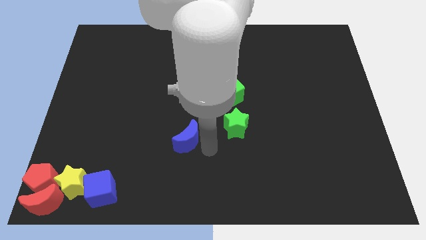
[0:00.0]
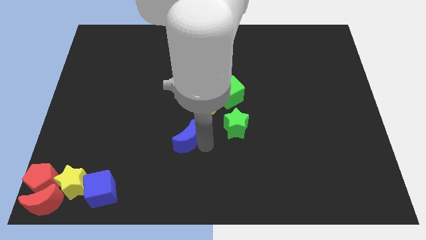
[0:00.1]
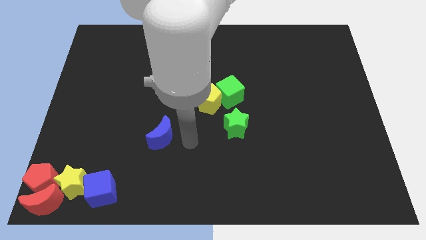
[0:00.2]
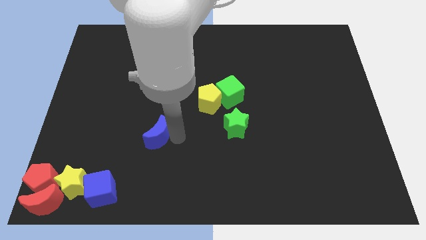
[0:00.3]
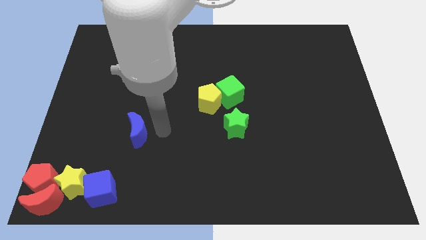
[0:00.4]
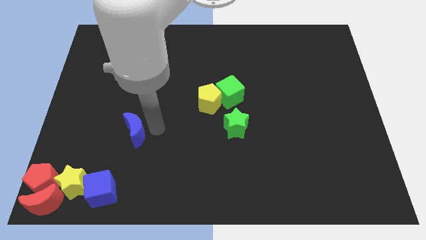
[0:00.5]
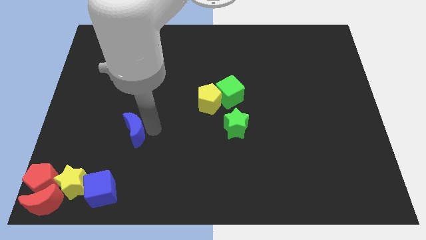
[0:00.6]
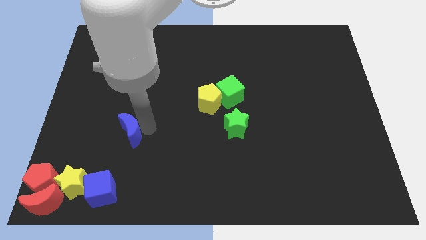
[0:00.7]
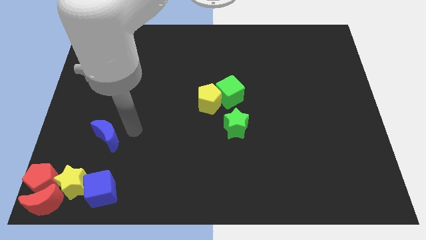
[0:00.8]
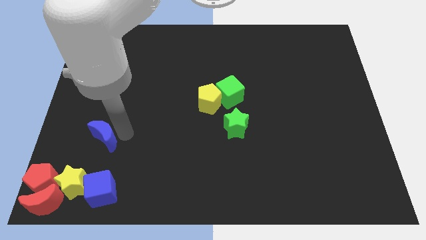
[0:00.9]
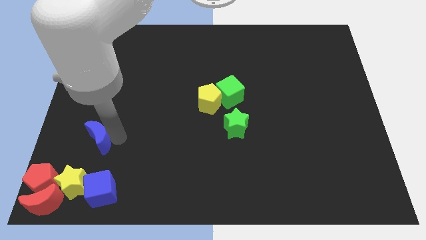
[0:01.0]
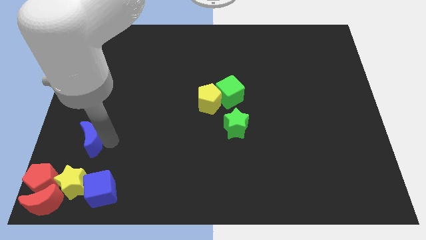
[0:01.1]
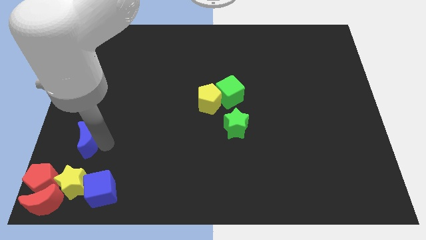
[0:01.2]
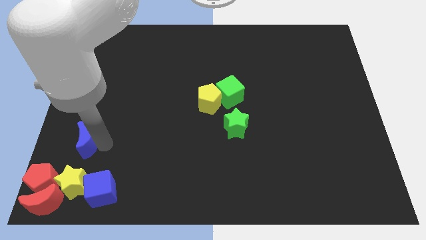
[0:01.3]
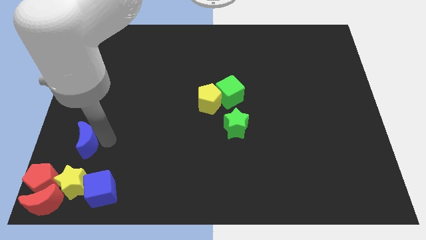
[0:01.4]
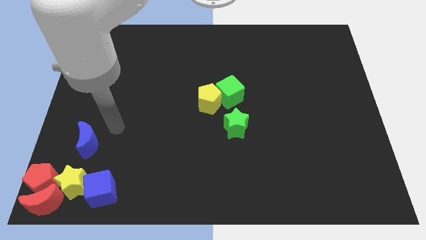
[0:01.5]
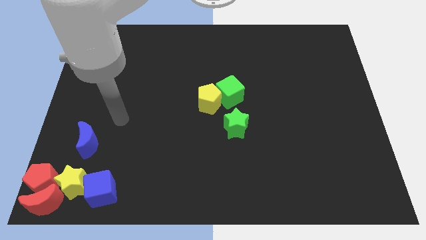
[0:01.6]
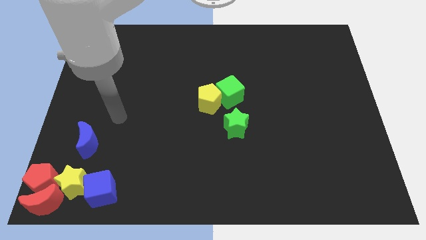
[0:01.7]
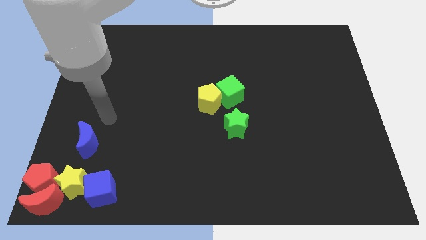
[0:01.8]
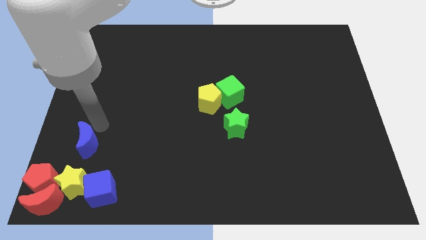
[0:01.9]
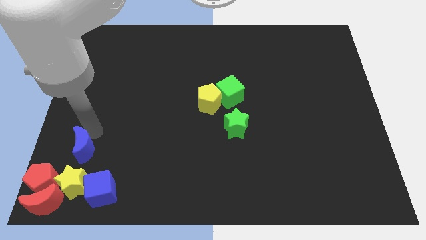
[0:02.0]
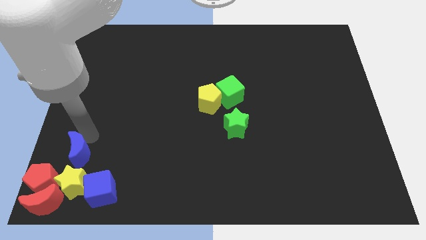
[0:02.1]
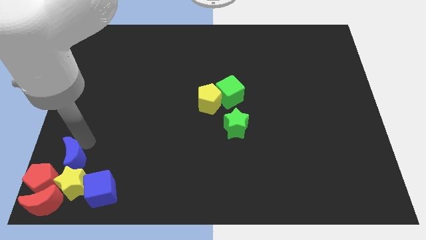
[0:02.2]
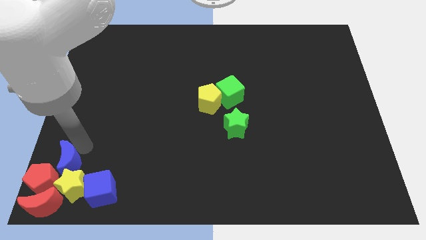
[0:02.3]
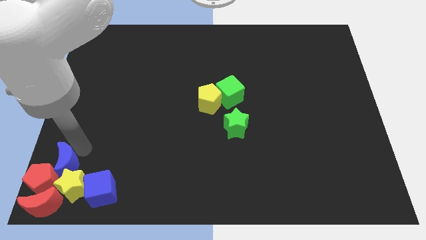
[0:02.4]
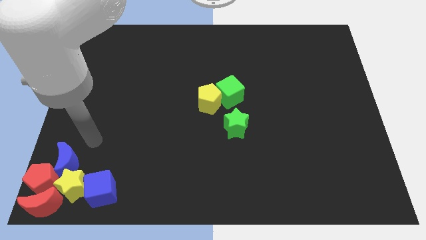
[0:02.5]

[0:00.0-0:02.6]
move the blue crescent towards the yellow star

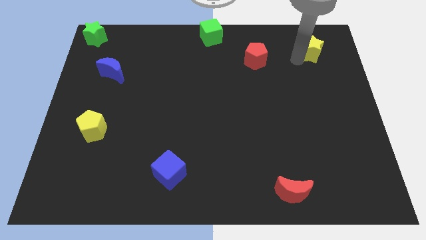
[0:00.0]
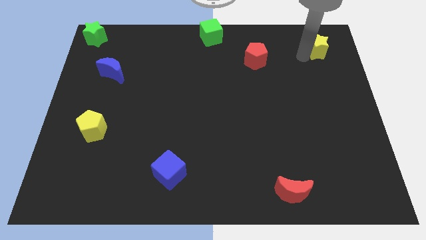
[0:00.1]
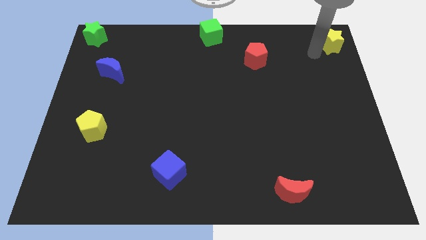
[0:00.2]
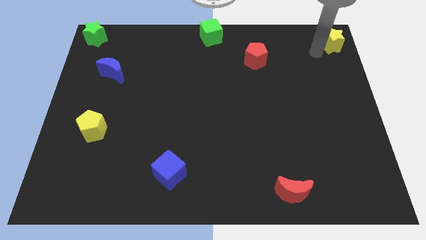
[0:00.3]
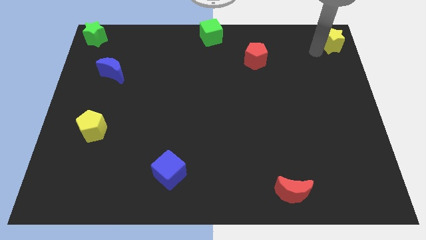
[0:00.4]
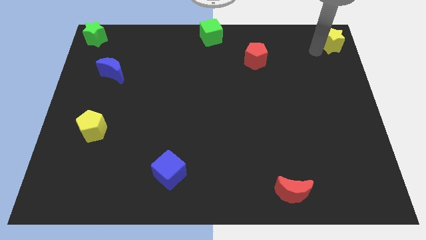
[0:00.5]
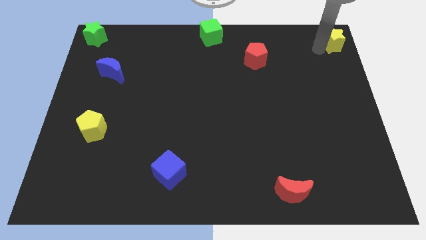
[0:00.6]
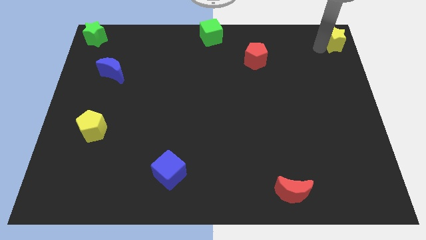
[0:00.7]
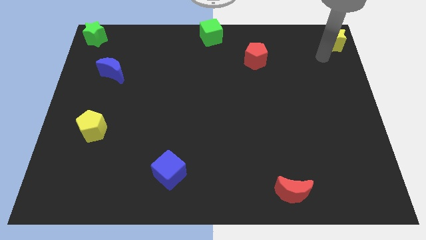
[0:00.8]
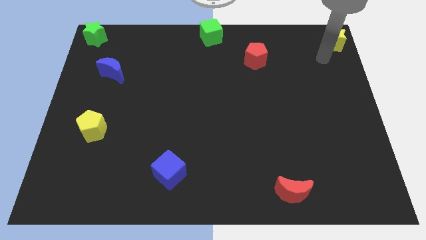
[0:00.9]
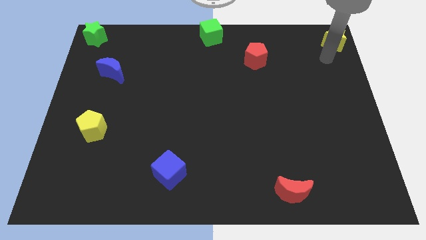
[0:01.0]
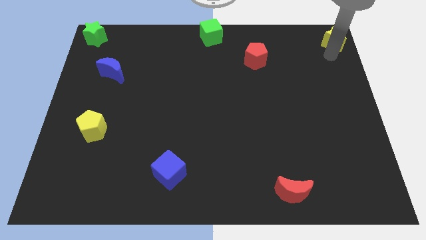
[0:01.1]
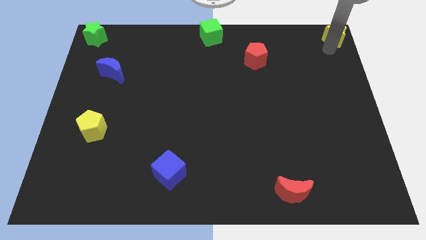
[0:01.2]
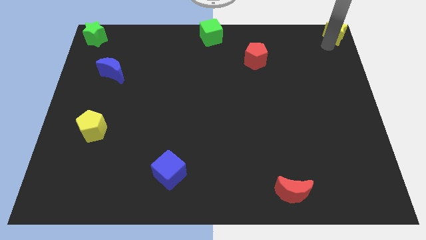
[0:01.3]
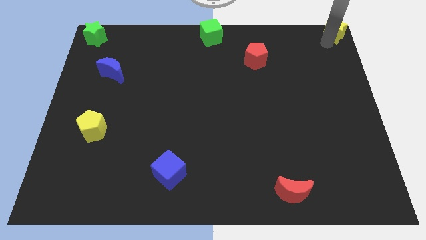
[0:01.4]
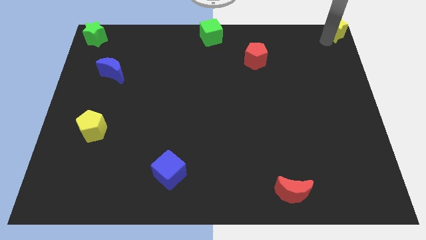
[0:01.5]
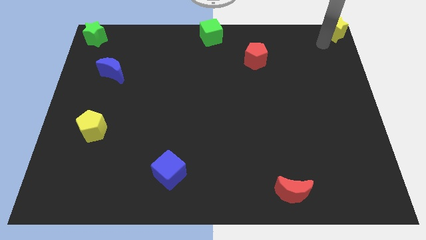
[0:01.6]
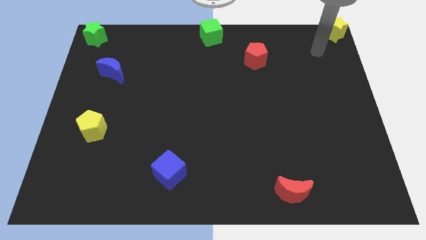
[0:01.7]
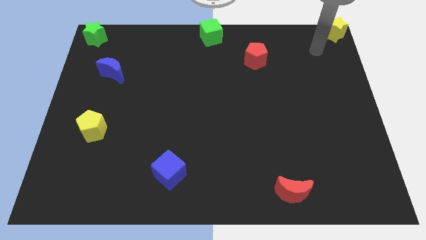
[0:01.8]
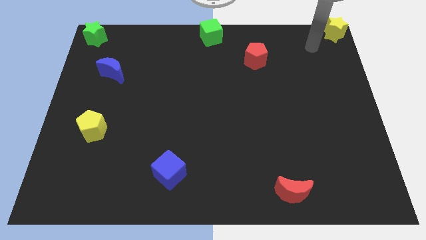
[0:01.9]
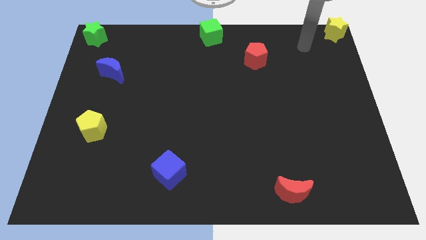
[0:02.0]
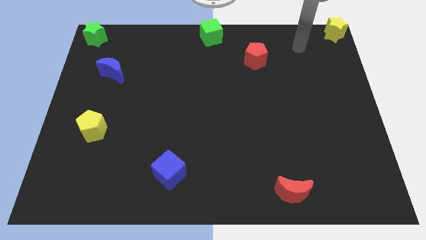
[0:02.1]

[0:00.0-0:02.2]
move yellow star to the top right corner

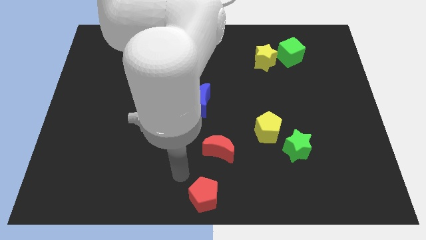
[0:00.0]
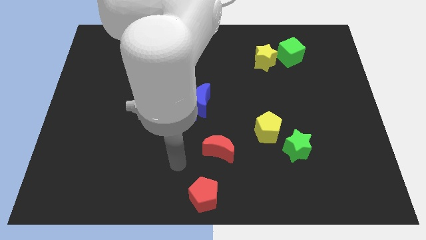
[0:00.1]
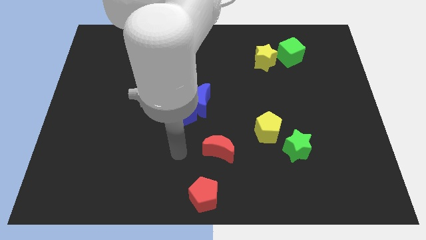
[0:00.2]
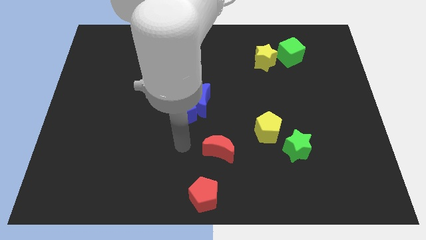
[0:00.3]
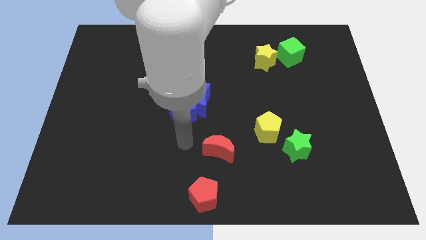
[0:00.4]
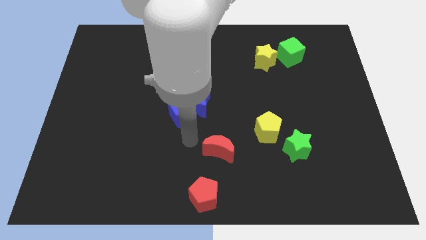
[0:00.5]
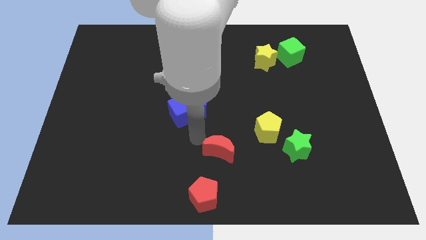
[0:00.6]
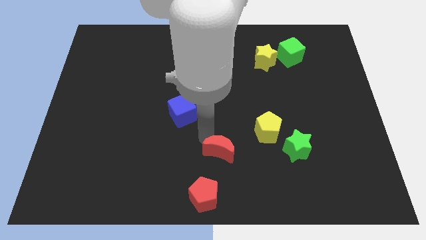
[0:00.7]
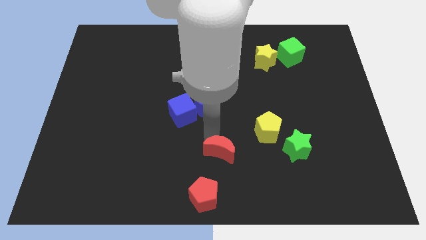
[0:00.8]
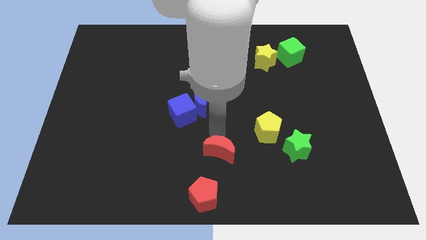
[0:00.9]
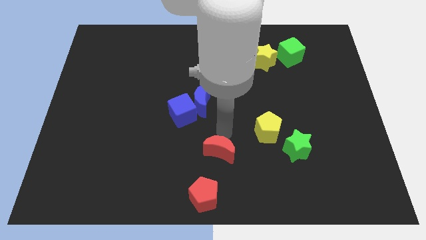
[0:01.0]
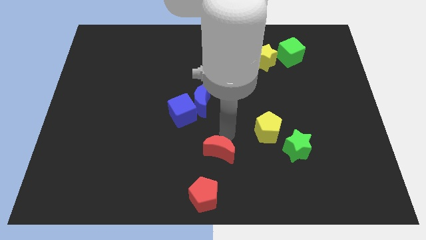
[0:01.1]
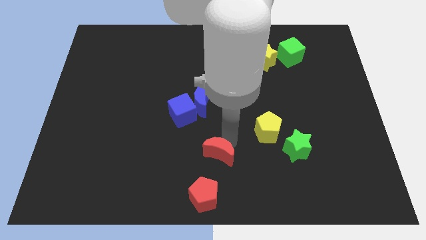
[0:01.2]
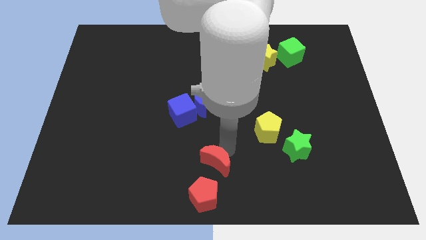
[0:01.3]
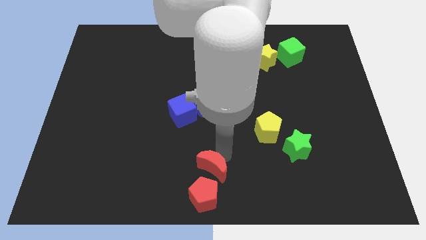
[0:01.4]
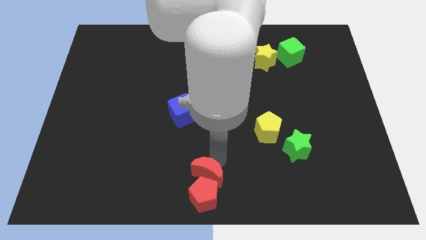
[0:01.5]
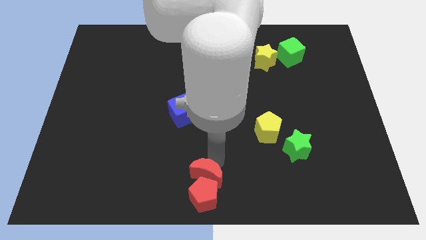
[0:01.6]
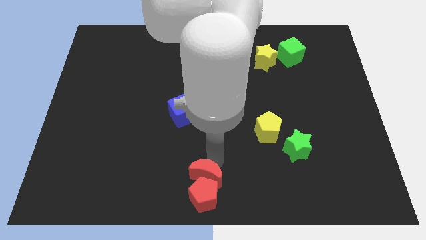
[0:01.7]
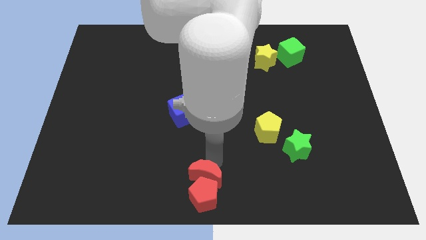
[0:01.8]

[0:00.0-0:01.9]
place red crescent on top of red pentagon

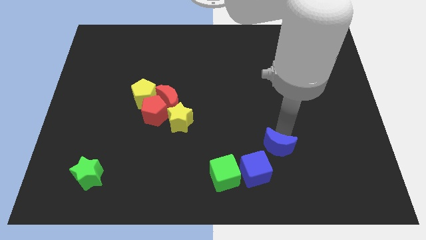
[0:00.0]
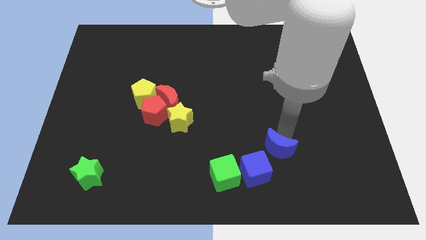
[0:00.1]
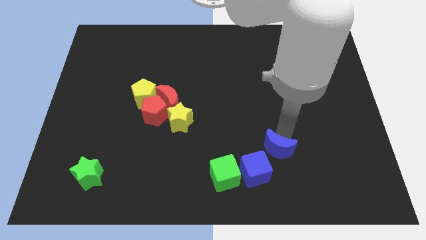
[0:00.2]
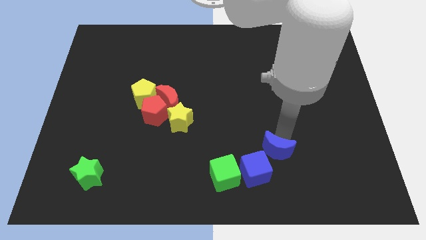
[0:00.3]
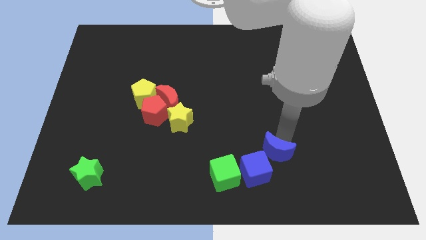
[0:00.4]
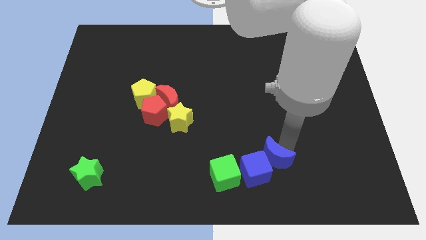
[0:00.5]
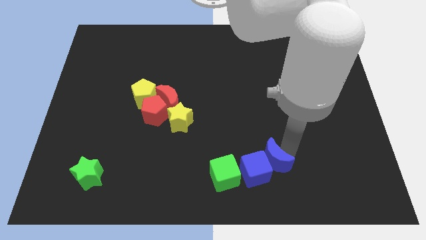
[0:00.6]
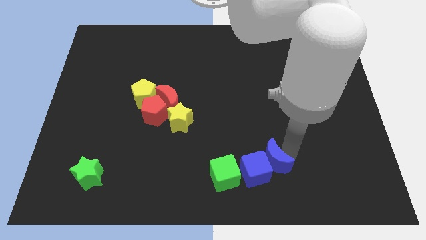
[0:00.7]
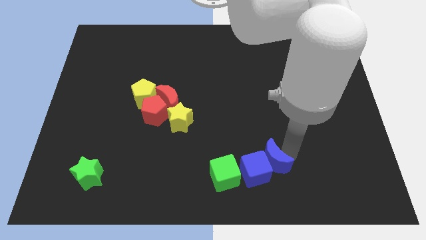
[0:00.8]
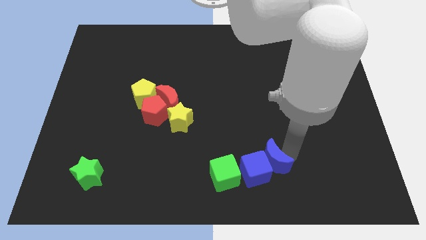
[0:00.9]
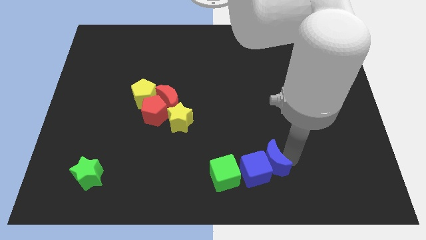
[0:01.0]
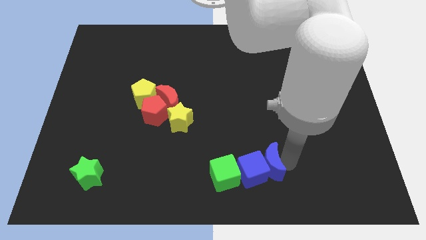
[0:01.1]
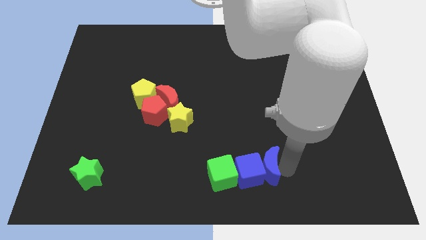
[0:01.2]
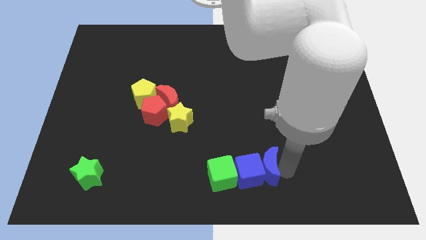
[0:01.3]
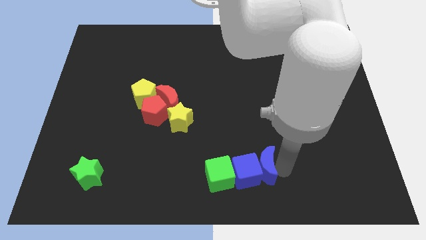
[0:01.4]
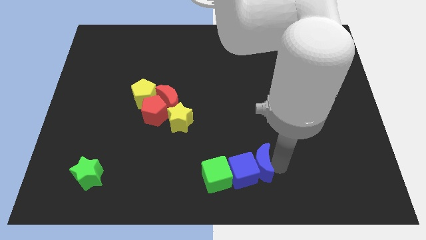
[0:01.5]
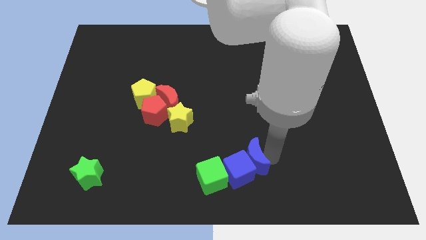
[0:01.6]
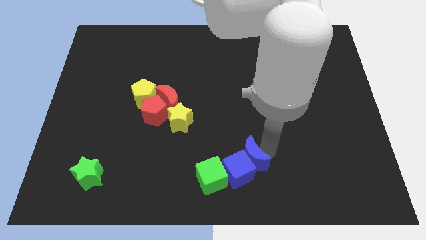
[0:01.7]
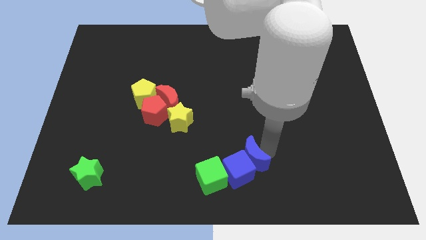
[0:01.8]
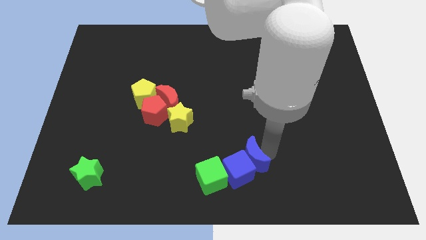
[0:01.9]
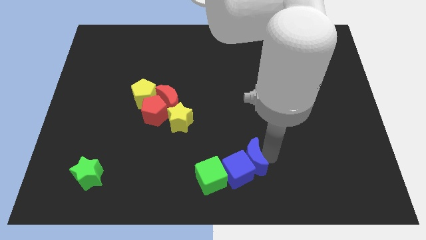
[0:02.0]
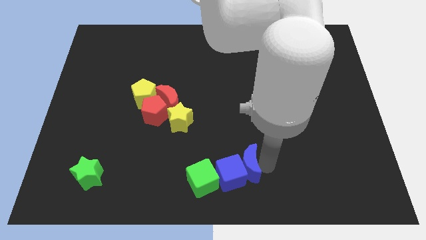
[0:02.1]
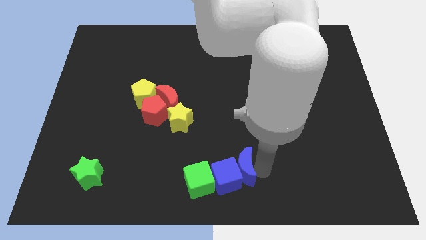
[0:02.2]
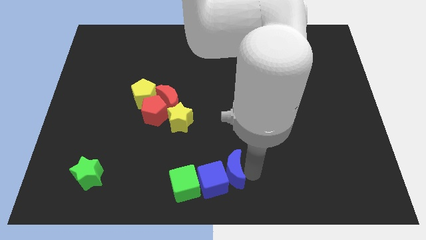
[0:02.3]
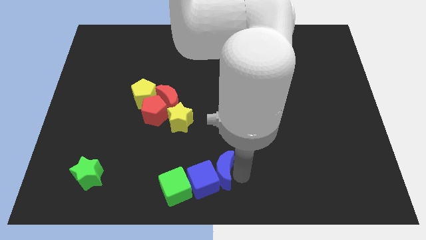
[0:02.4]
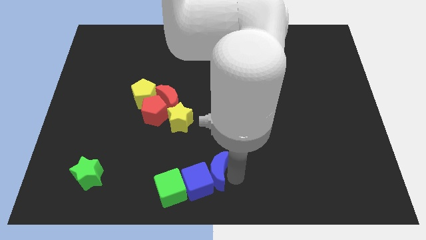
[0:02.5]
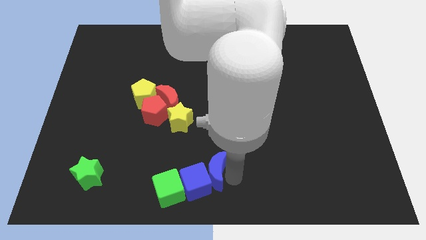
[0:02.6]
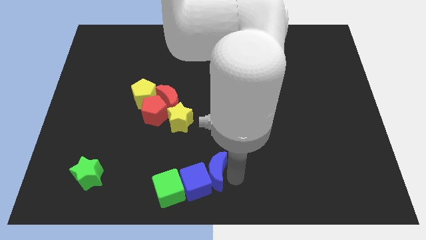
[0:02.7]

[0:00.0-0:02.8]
push blue cube below yellow star
